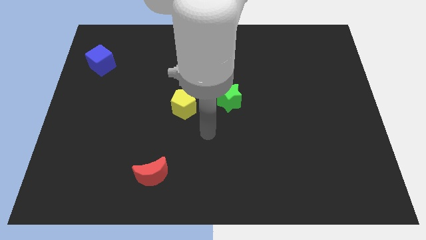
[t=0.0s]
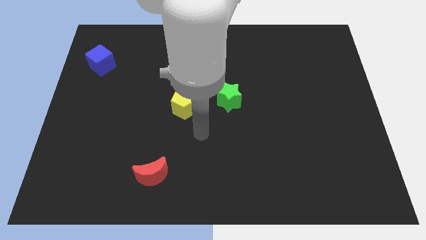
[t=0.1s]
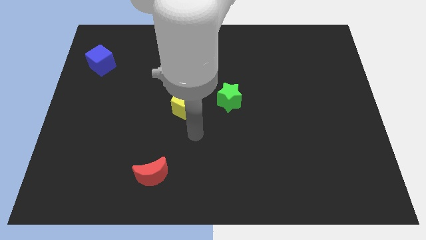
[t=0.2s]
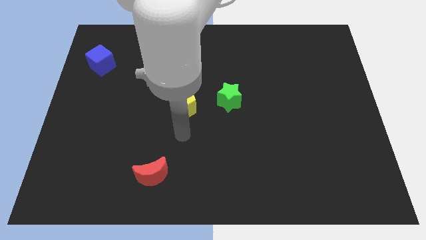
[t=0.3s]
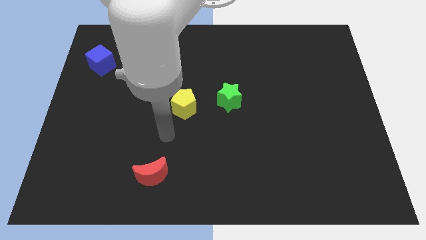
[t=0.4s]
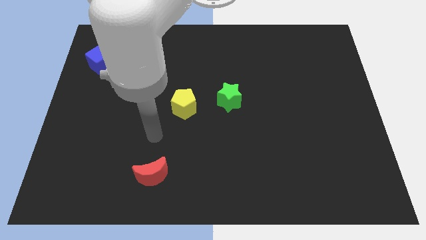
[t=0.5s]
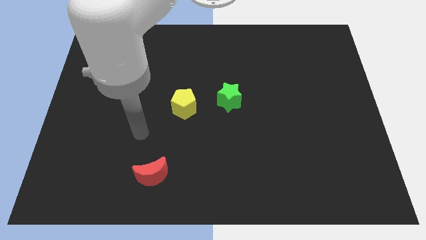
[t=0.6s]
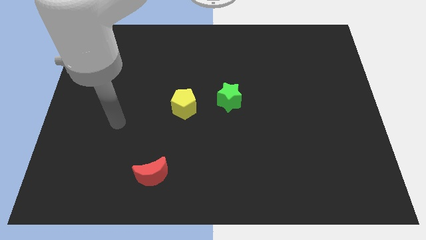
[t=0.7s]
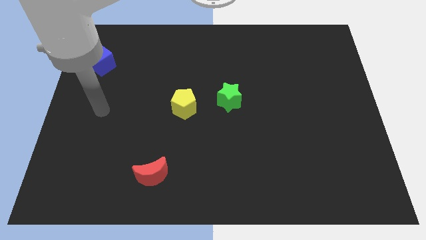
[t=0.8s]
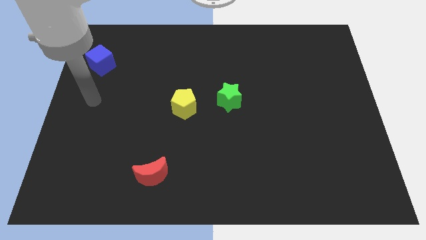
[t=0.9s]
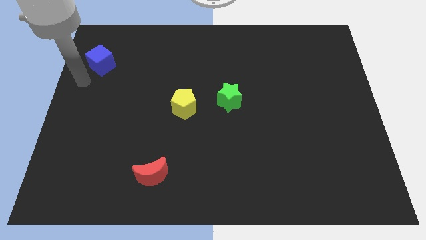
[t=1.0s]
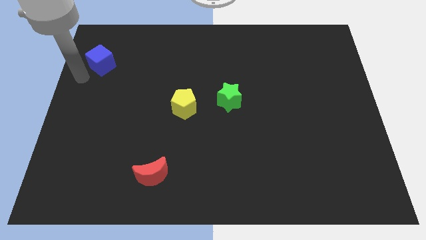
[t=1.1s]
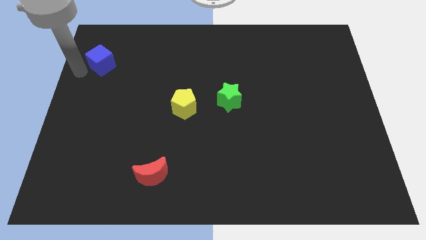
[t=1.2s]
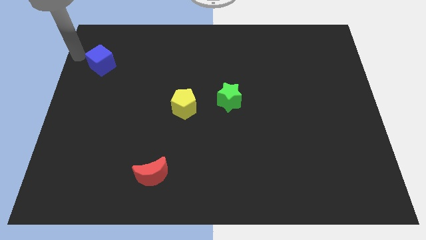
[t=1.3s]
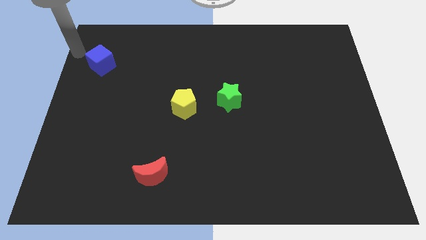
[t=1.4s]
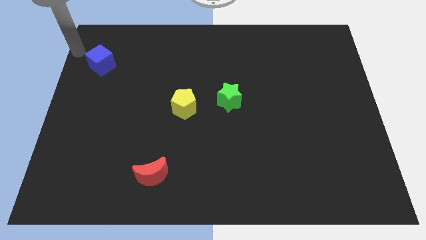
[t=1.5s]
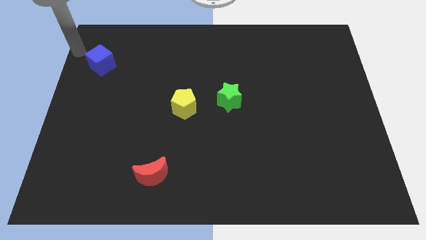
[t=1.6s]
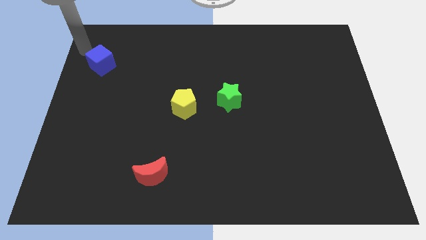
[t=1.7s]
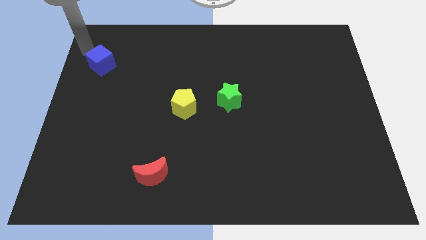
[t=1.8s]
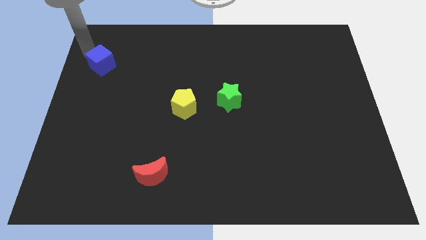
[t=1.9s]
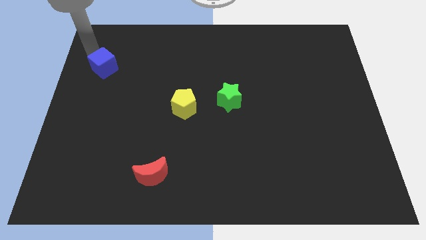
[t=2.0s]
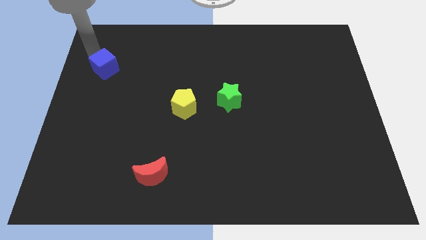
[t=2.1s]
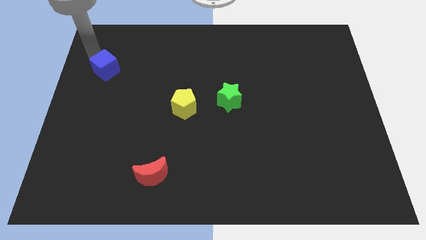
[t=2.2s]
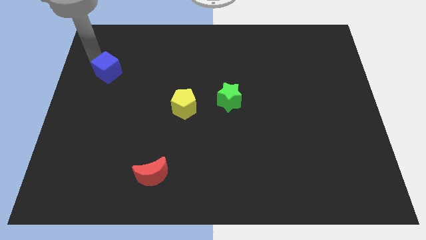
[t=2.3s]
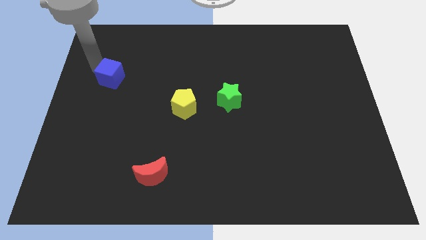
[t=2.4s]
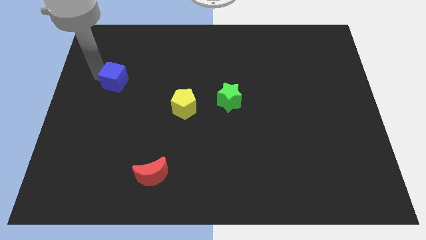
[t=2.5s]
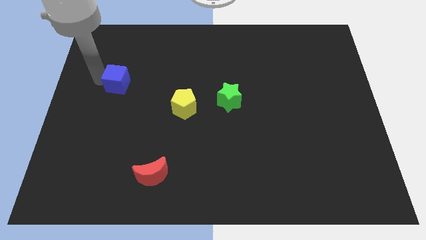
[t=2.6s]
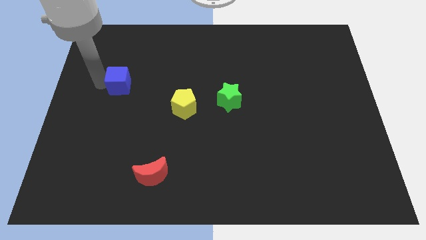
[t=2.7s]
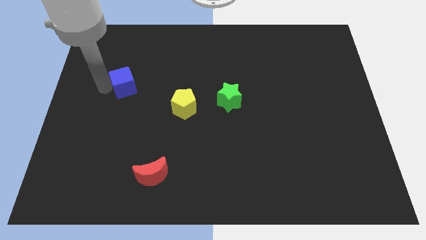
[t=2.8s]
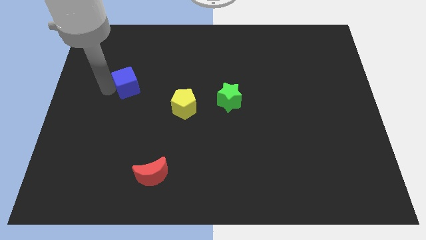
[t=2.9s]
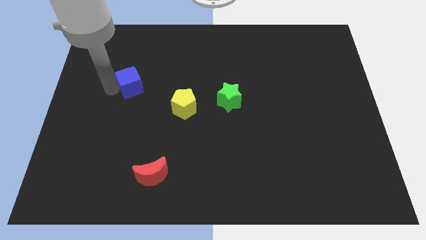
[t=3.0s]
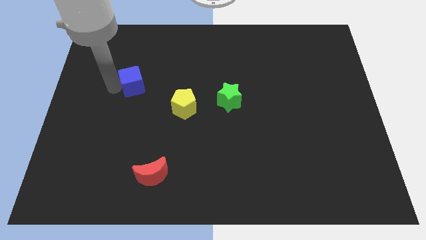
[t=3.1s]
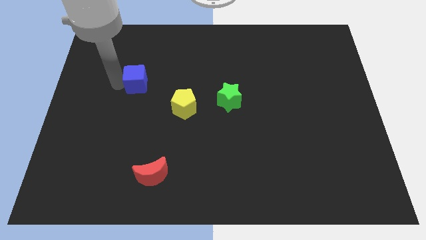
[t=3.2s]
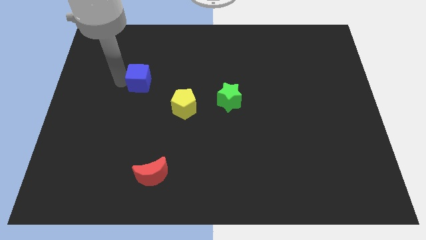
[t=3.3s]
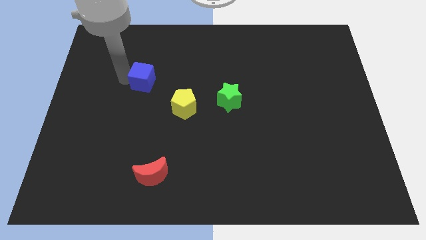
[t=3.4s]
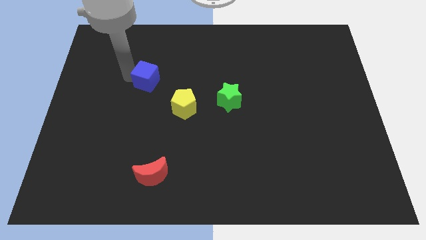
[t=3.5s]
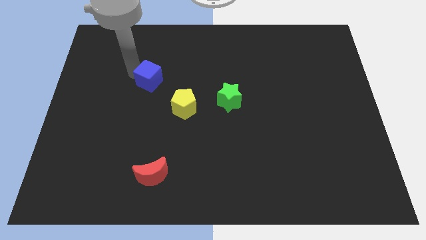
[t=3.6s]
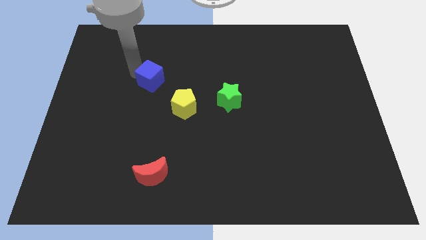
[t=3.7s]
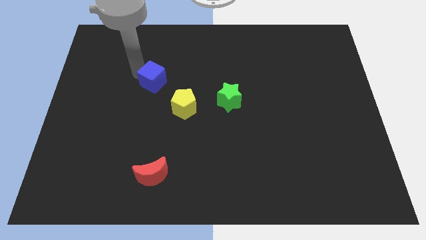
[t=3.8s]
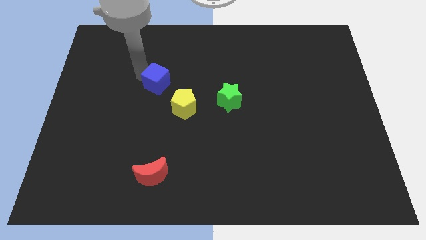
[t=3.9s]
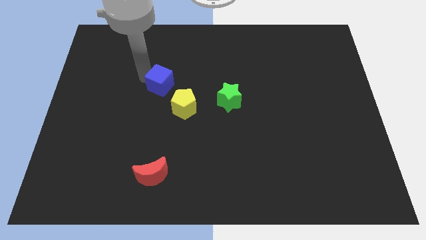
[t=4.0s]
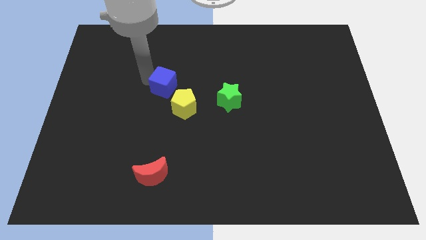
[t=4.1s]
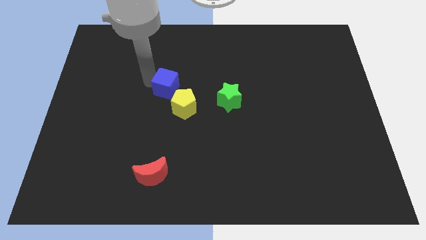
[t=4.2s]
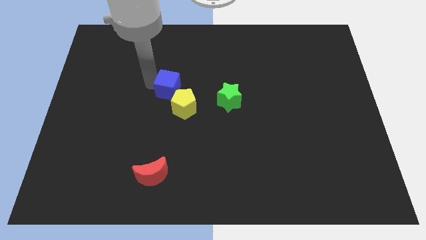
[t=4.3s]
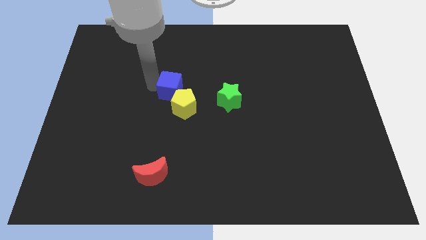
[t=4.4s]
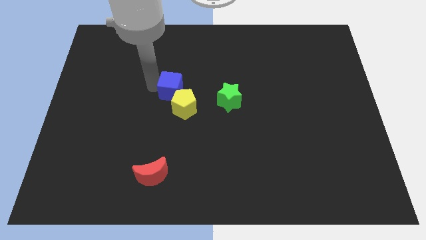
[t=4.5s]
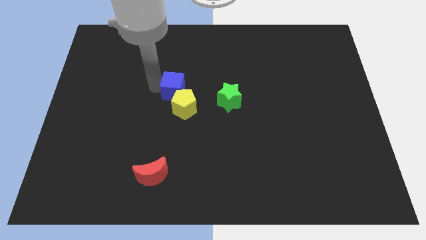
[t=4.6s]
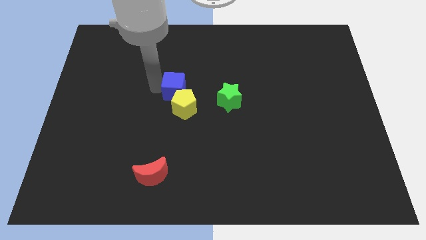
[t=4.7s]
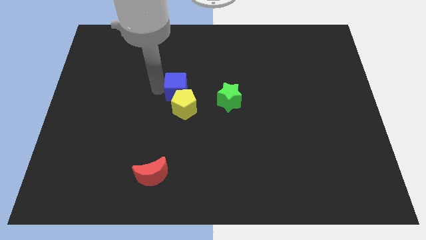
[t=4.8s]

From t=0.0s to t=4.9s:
put the blue block towards the yellow pentagon

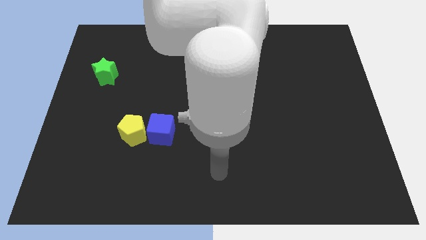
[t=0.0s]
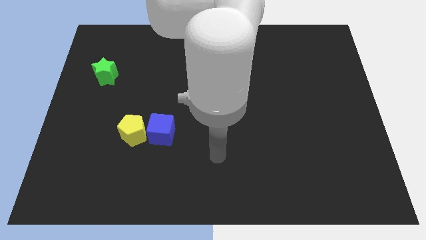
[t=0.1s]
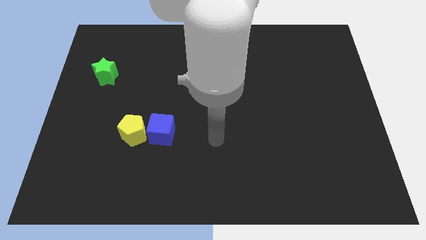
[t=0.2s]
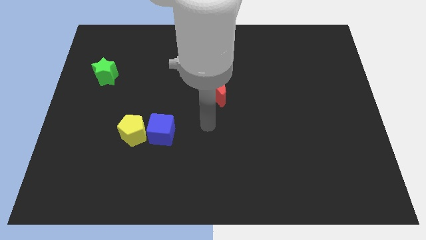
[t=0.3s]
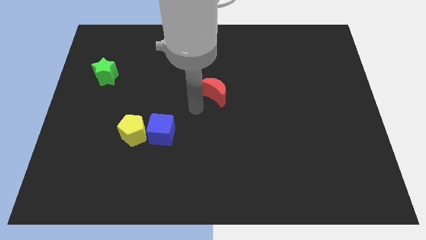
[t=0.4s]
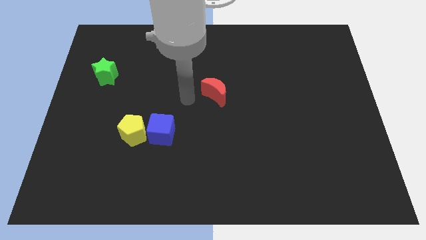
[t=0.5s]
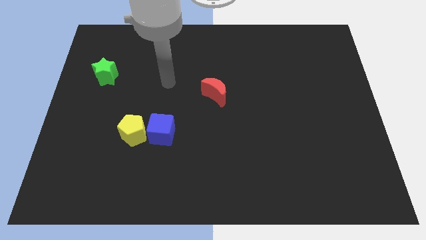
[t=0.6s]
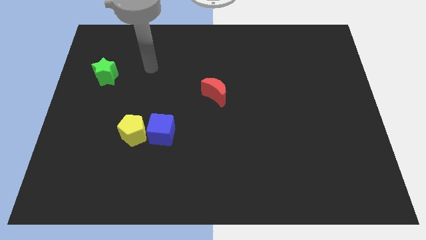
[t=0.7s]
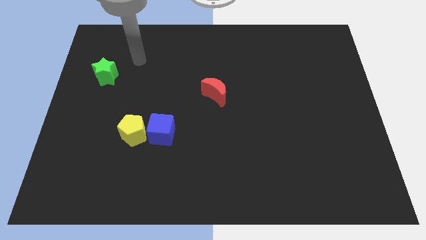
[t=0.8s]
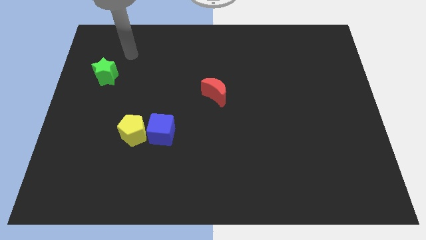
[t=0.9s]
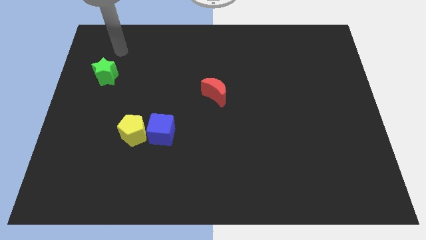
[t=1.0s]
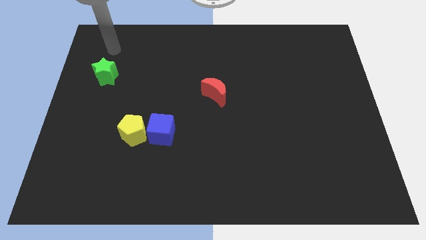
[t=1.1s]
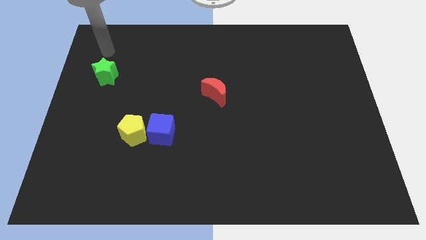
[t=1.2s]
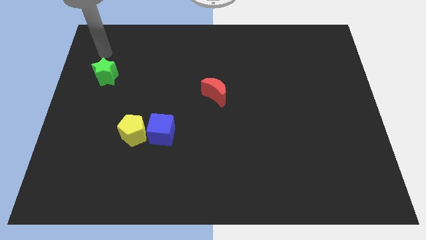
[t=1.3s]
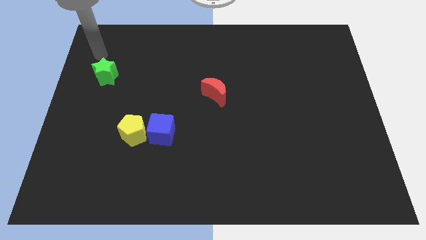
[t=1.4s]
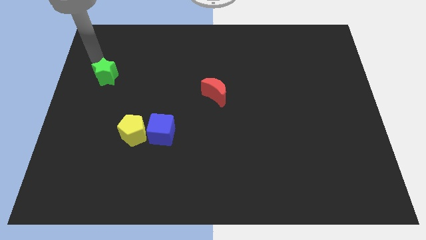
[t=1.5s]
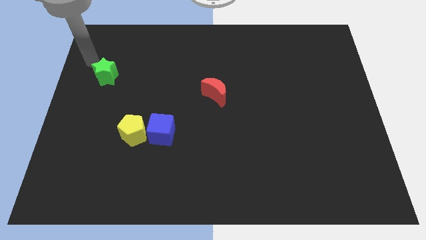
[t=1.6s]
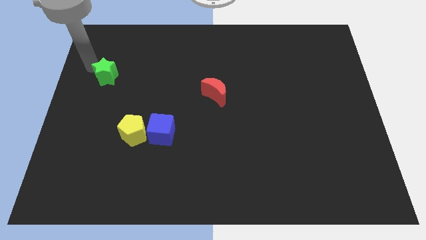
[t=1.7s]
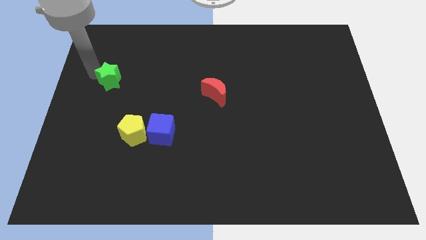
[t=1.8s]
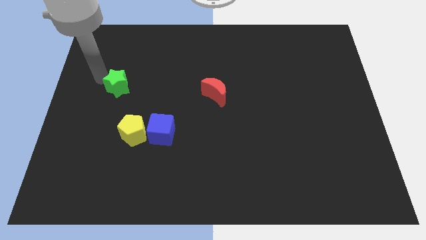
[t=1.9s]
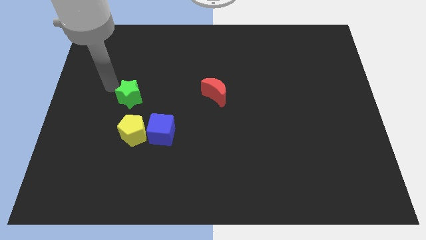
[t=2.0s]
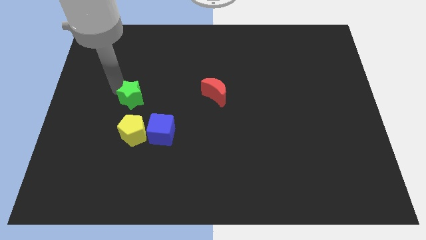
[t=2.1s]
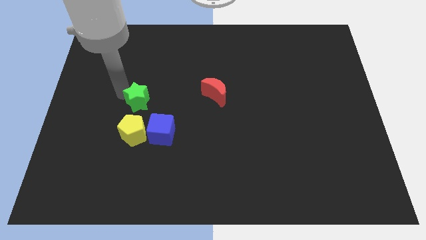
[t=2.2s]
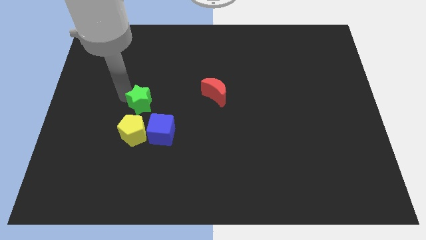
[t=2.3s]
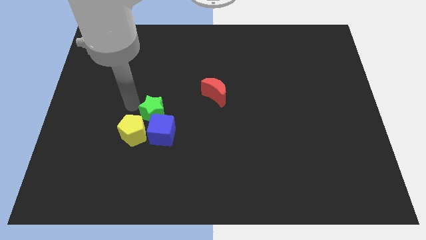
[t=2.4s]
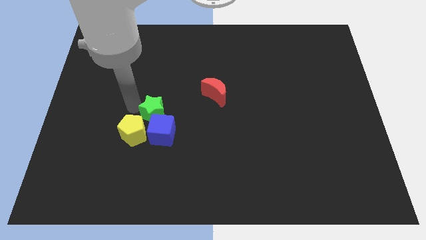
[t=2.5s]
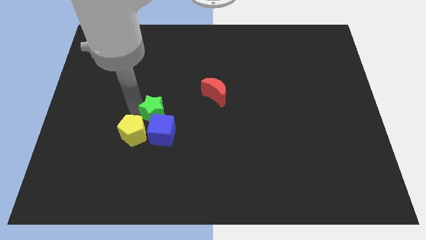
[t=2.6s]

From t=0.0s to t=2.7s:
push the green block to the blue cube

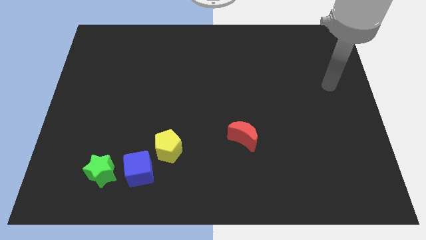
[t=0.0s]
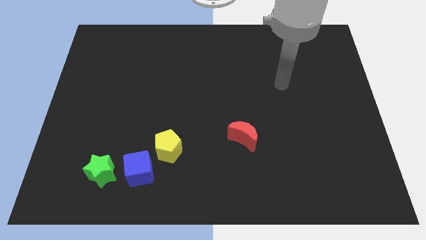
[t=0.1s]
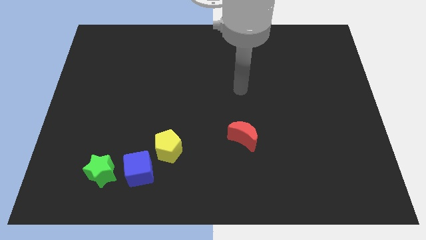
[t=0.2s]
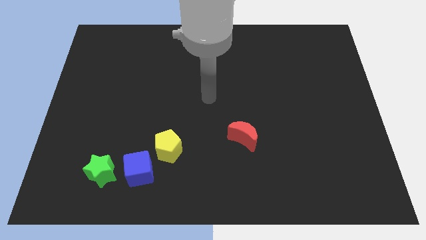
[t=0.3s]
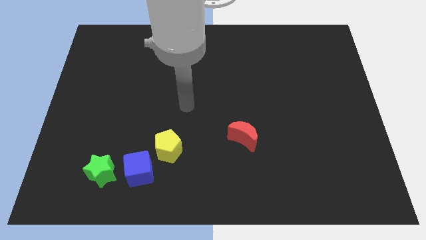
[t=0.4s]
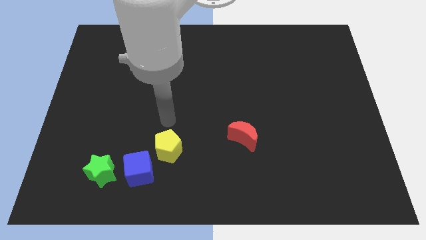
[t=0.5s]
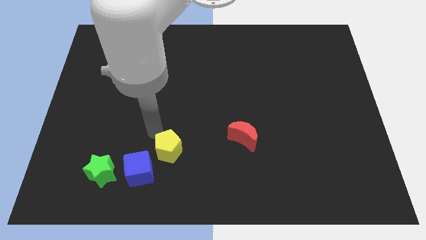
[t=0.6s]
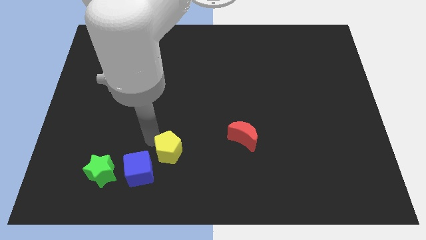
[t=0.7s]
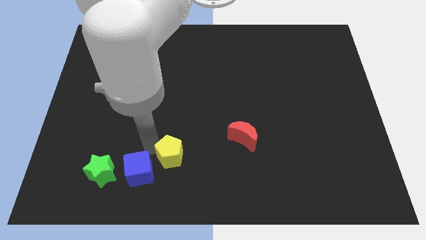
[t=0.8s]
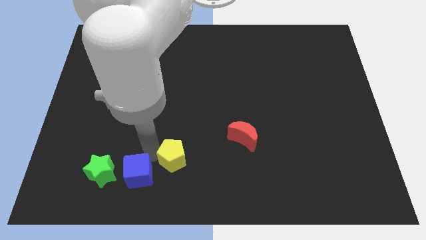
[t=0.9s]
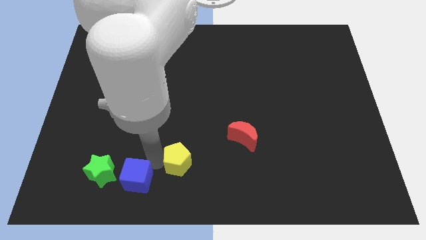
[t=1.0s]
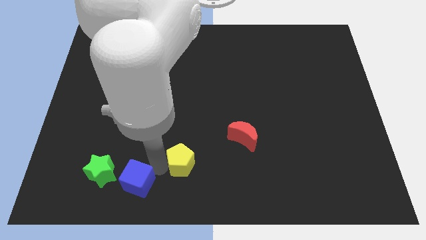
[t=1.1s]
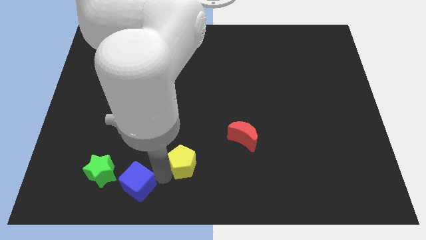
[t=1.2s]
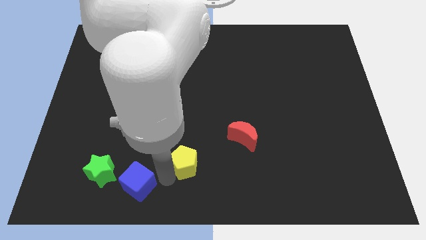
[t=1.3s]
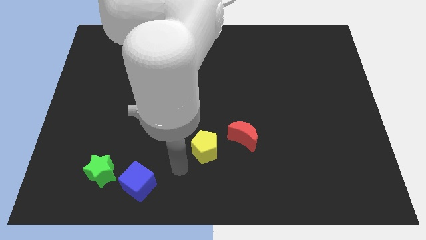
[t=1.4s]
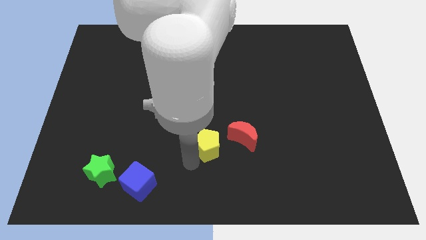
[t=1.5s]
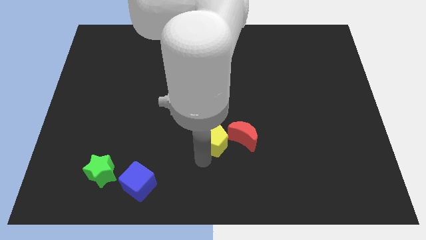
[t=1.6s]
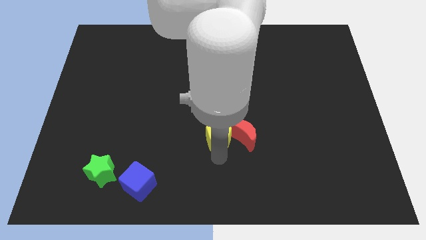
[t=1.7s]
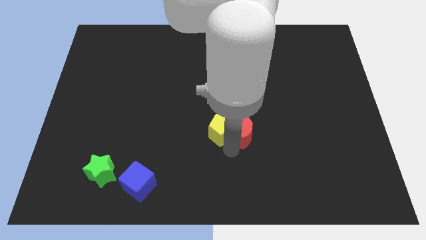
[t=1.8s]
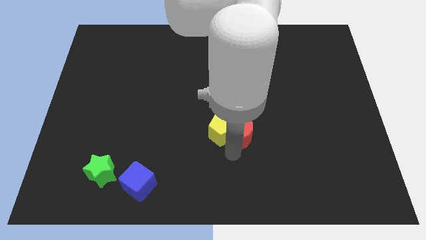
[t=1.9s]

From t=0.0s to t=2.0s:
move the yellow block close to the red moon
